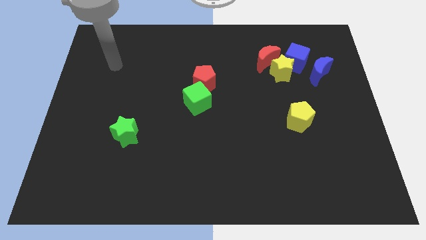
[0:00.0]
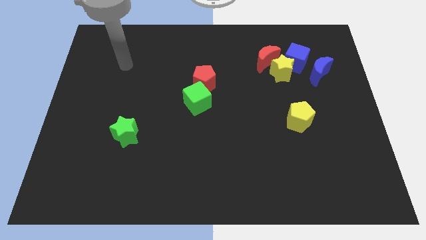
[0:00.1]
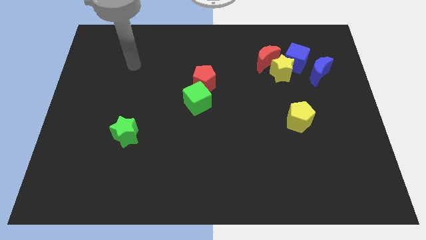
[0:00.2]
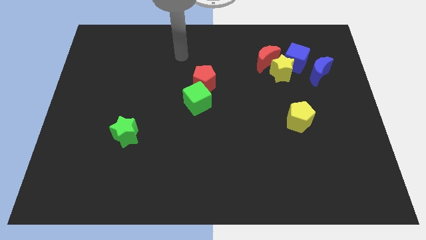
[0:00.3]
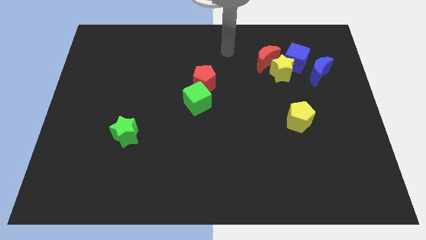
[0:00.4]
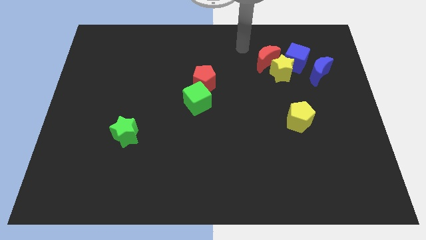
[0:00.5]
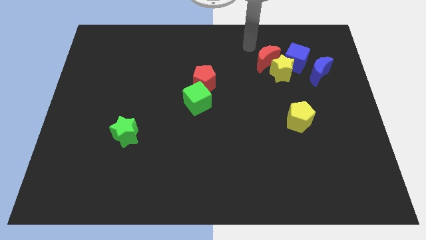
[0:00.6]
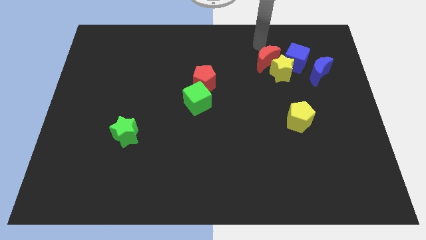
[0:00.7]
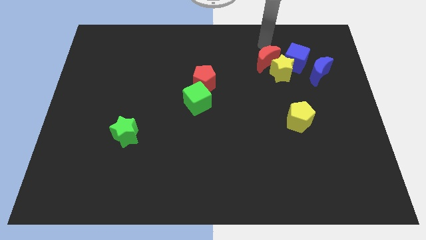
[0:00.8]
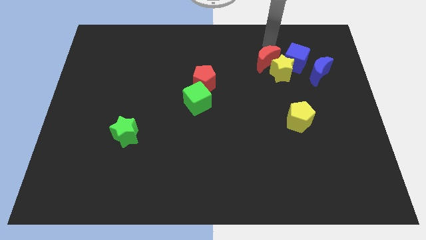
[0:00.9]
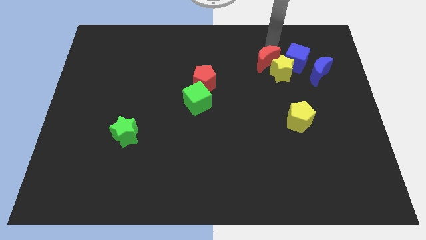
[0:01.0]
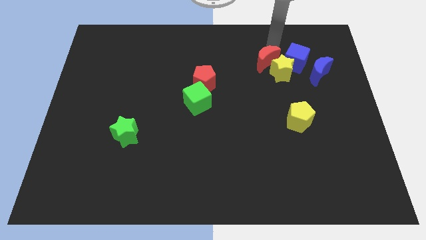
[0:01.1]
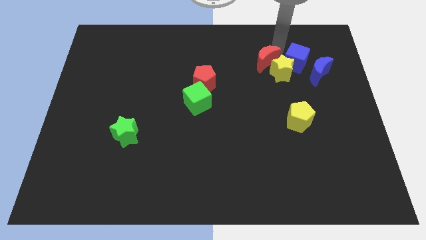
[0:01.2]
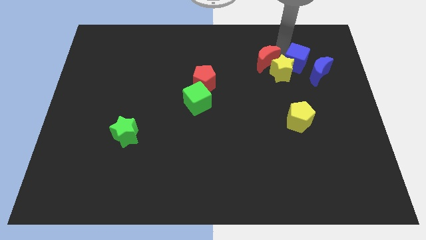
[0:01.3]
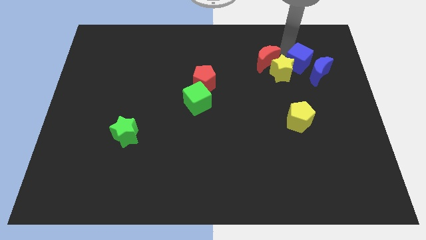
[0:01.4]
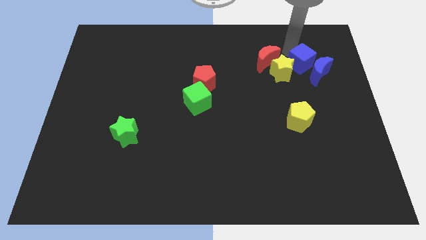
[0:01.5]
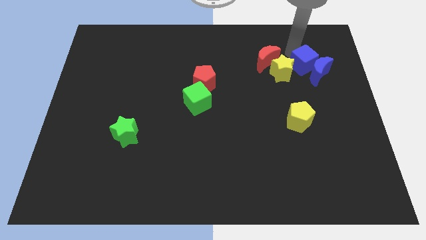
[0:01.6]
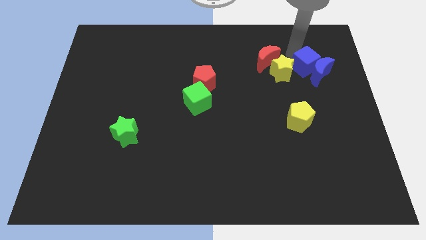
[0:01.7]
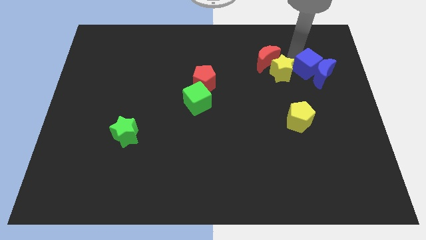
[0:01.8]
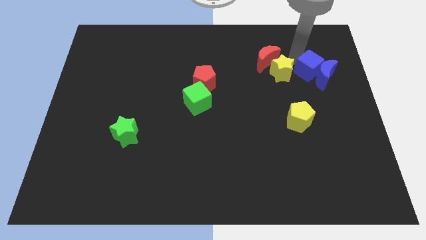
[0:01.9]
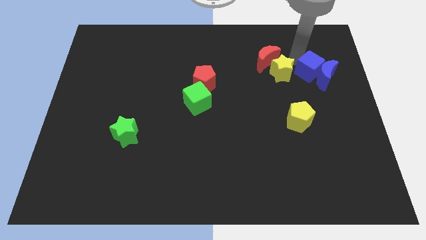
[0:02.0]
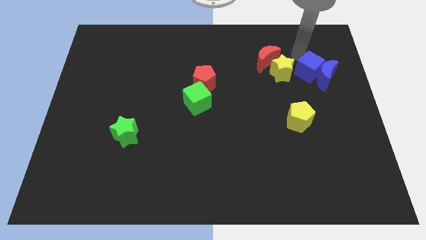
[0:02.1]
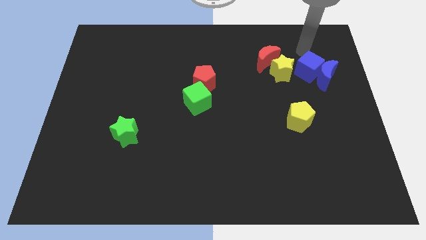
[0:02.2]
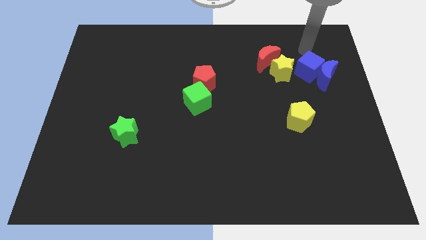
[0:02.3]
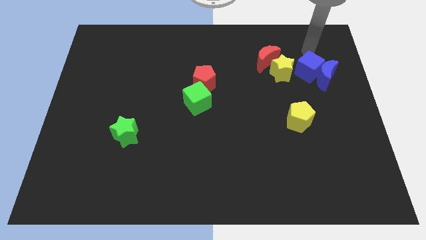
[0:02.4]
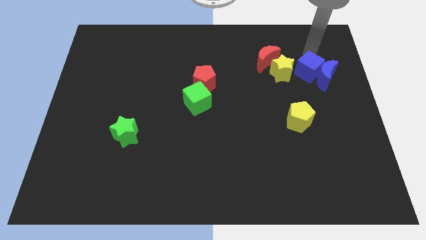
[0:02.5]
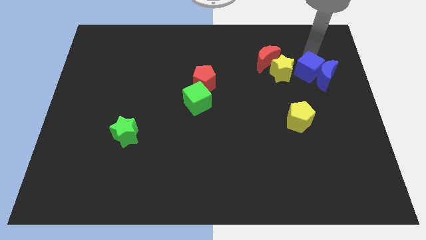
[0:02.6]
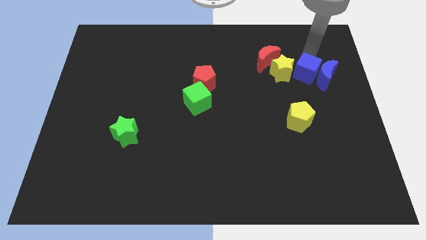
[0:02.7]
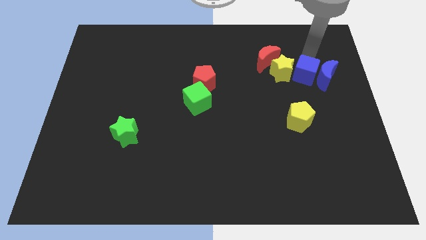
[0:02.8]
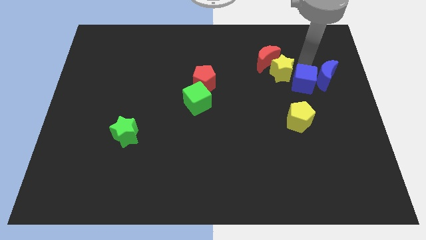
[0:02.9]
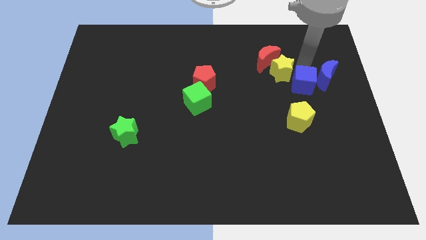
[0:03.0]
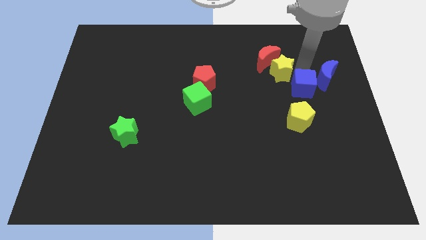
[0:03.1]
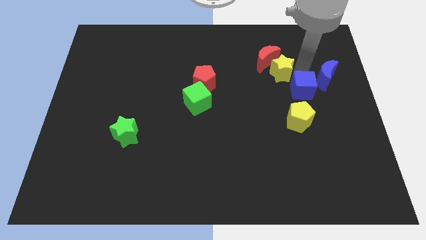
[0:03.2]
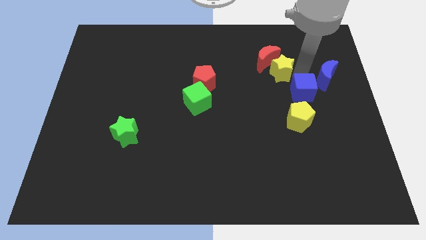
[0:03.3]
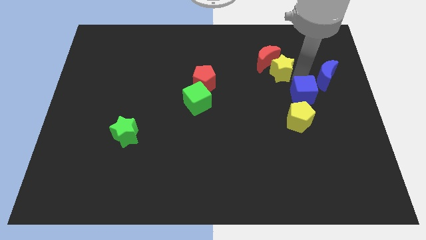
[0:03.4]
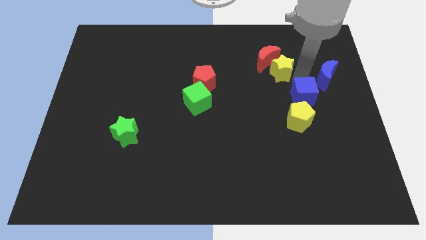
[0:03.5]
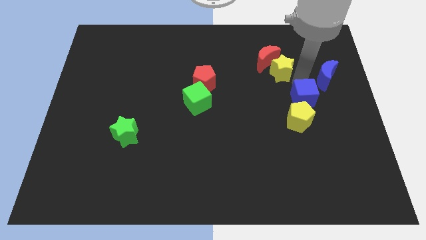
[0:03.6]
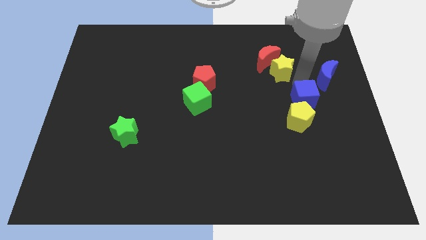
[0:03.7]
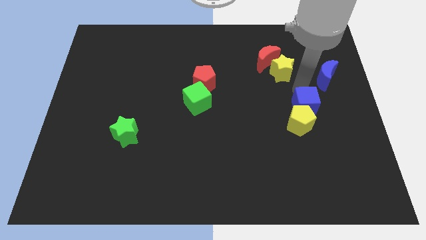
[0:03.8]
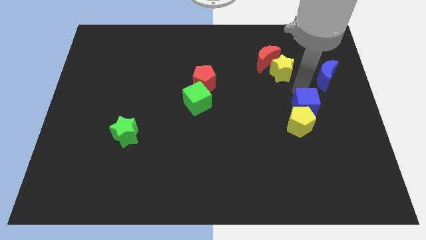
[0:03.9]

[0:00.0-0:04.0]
put the blue cube towards the yellow pentagon

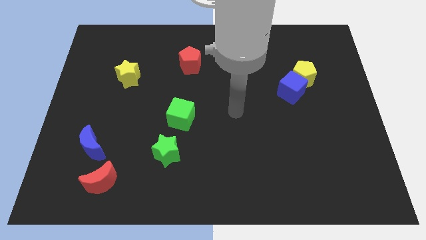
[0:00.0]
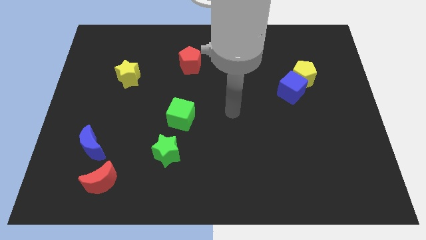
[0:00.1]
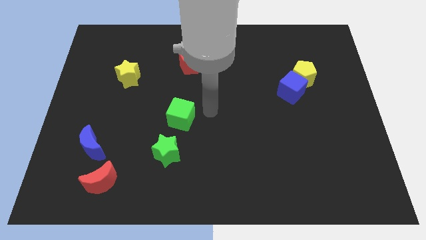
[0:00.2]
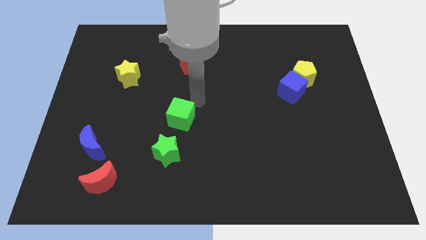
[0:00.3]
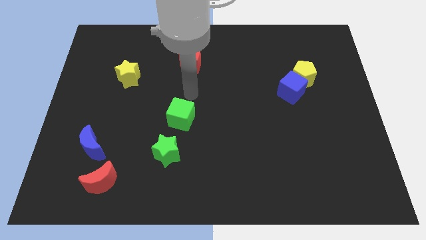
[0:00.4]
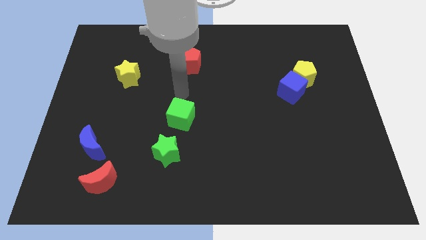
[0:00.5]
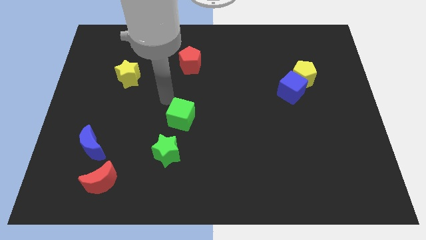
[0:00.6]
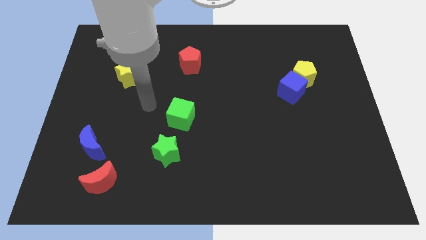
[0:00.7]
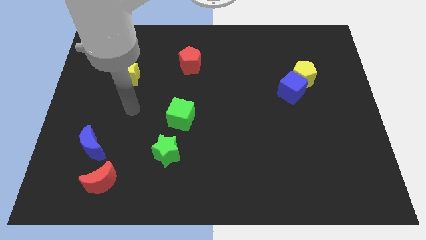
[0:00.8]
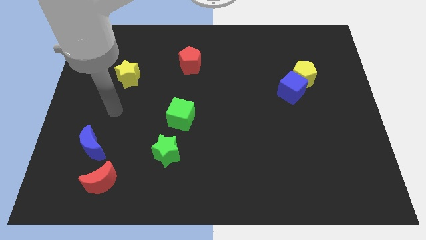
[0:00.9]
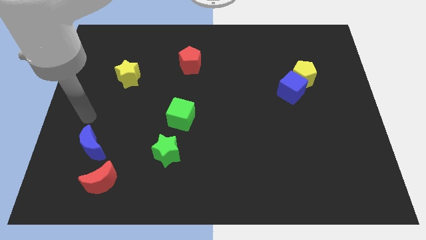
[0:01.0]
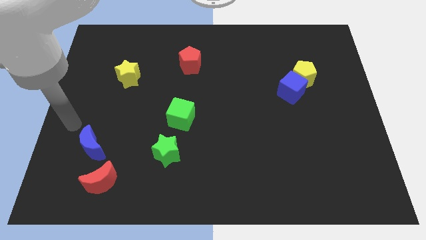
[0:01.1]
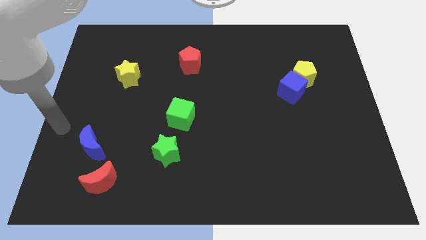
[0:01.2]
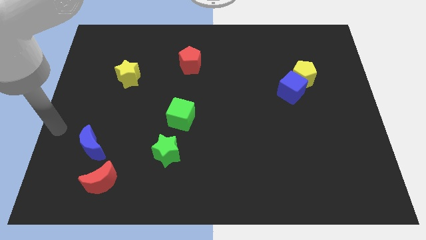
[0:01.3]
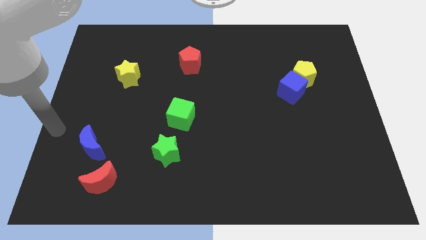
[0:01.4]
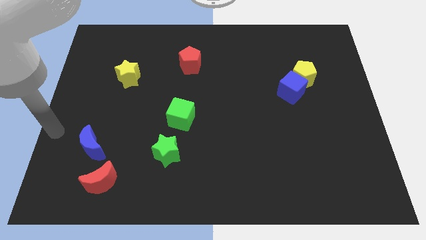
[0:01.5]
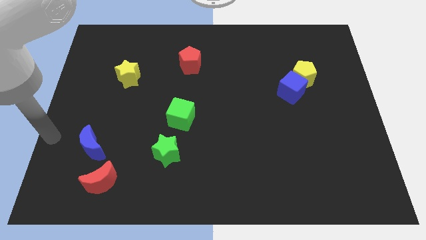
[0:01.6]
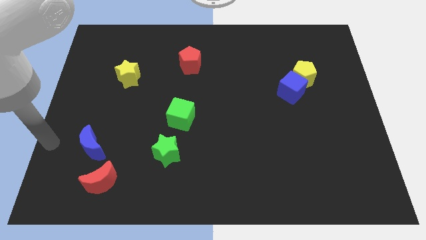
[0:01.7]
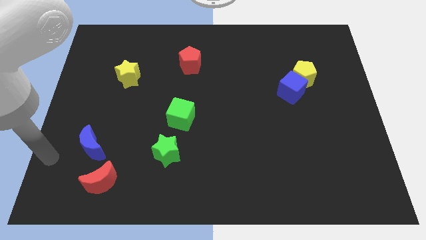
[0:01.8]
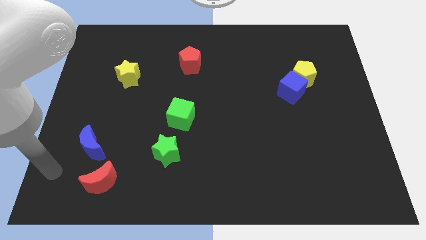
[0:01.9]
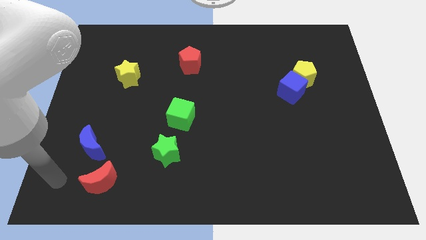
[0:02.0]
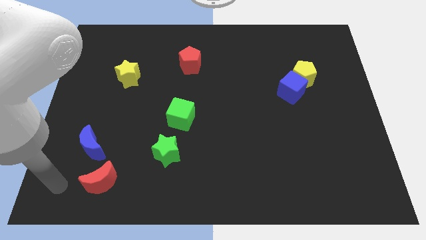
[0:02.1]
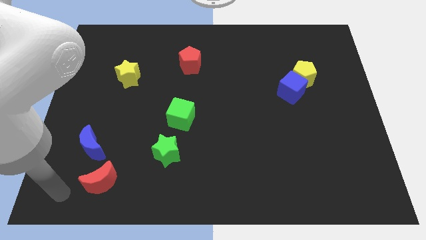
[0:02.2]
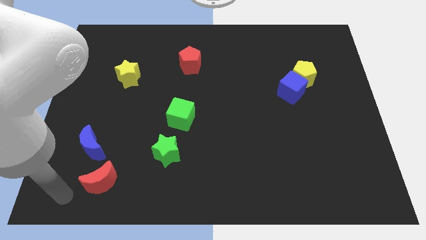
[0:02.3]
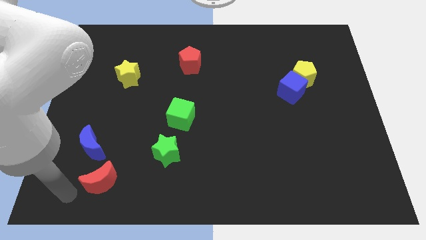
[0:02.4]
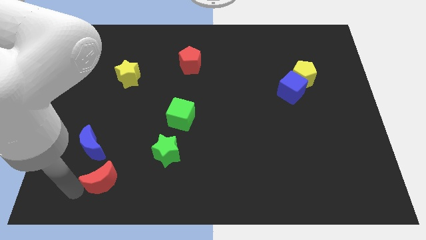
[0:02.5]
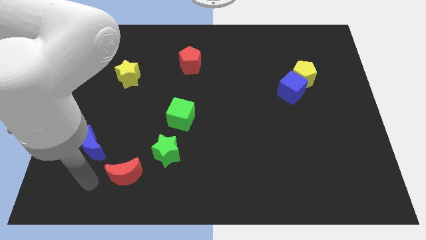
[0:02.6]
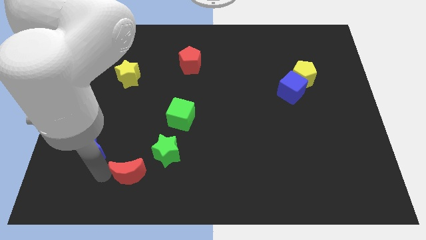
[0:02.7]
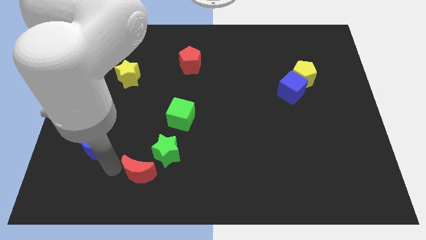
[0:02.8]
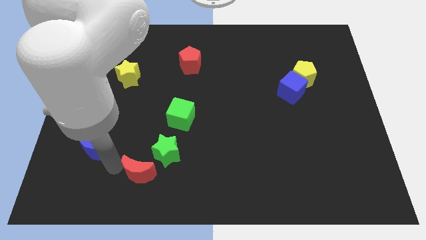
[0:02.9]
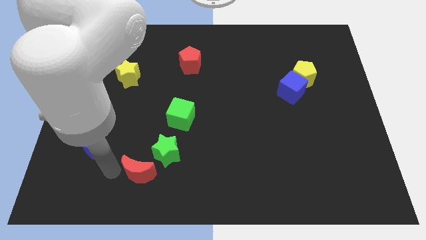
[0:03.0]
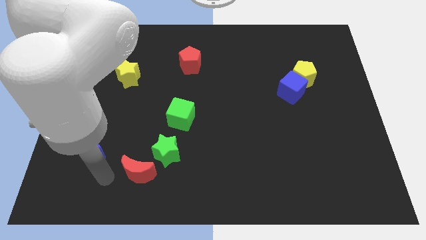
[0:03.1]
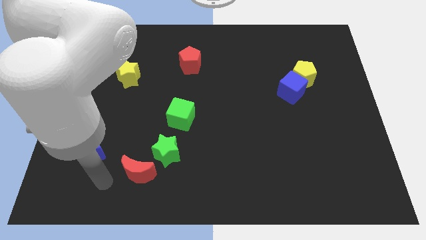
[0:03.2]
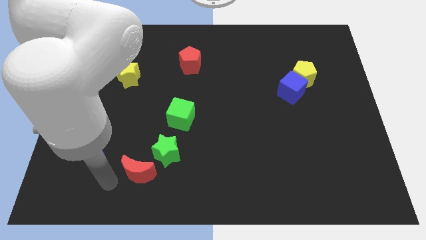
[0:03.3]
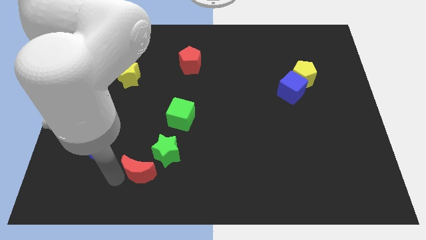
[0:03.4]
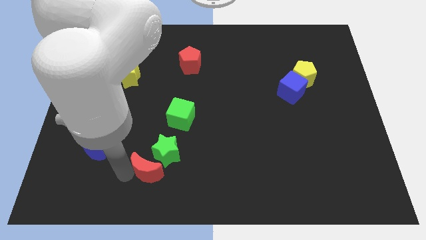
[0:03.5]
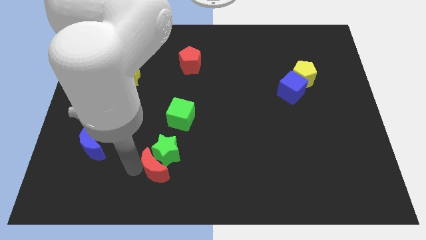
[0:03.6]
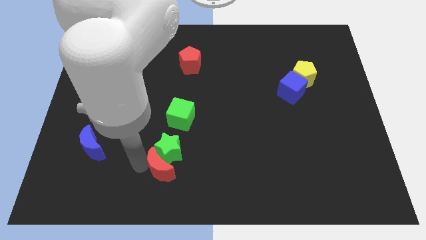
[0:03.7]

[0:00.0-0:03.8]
slide the red moon to the green star

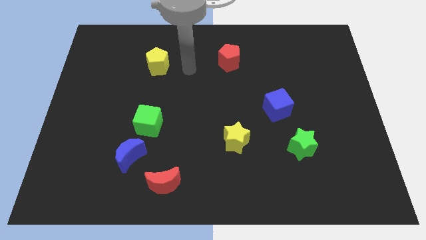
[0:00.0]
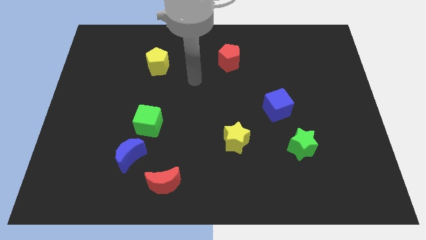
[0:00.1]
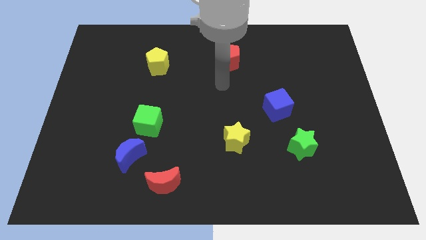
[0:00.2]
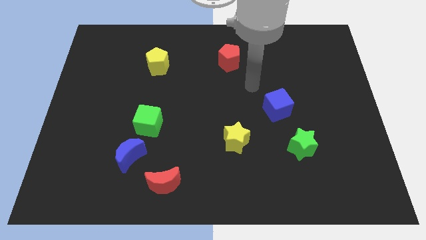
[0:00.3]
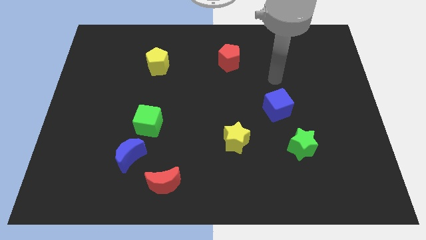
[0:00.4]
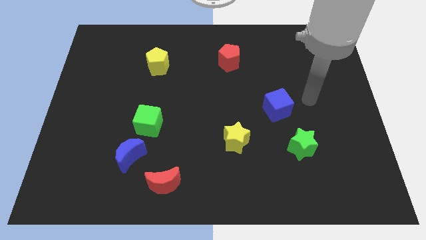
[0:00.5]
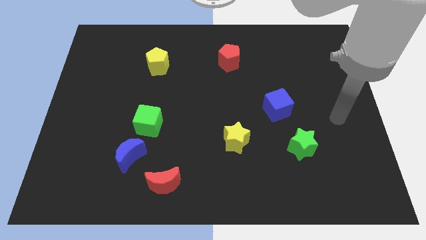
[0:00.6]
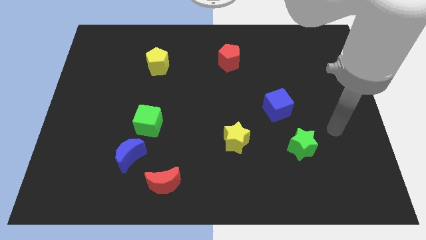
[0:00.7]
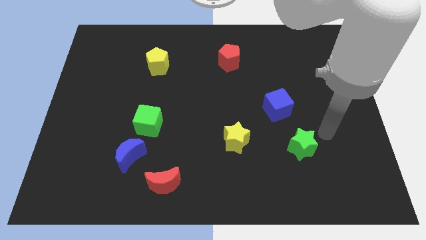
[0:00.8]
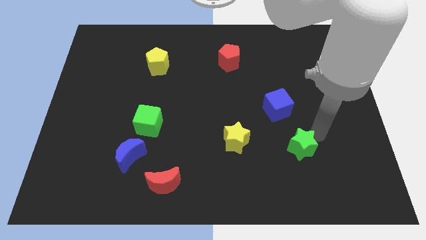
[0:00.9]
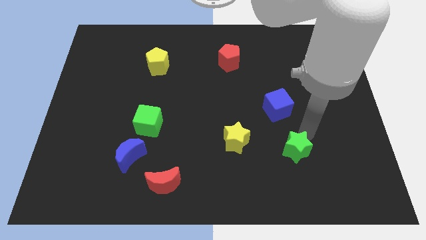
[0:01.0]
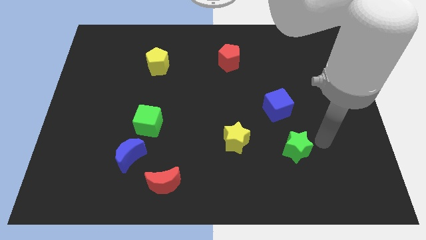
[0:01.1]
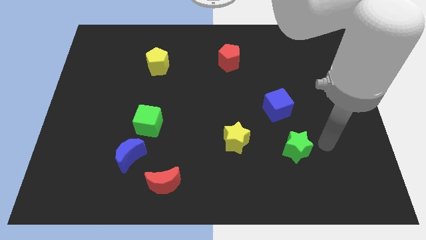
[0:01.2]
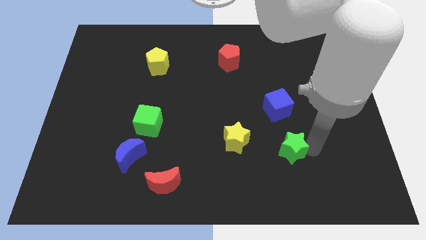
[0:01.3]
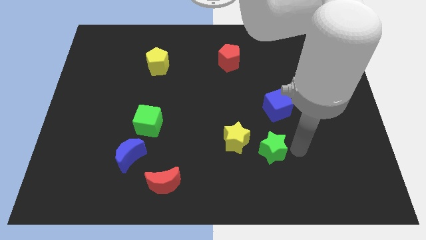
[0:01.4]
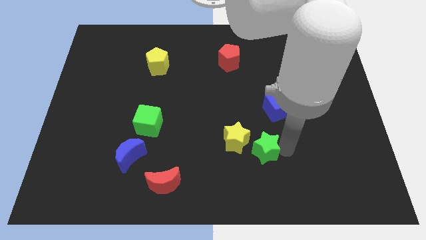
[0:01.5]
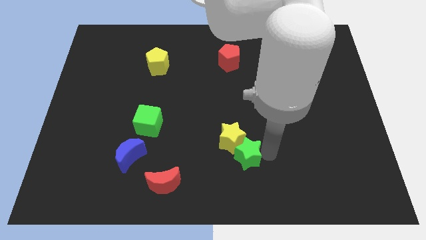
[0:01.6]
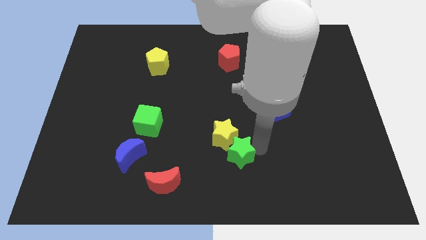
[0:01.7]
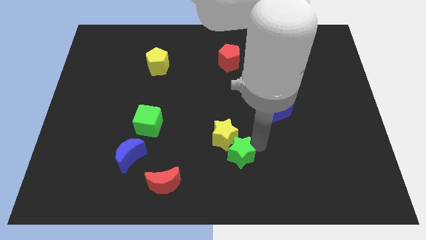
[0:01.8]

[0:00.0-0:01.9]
slide the green star next to the yellow star
